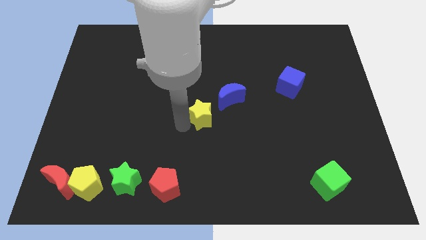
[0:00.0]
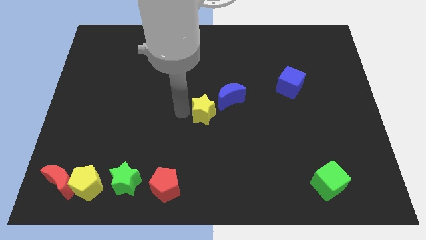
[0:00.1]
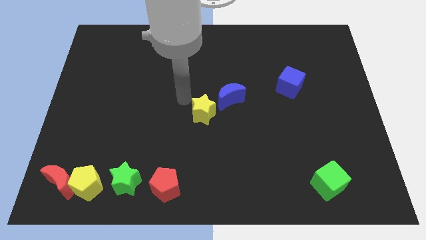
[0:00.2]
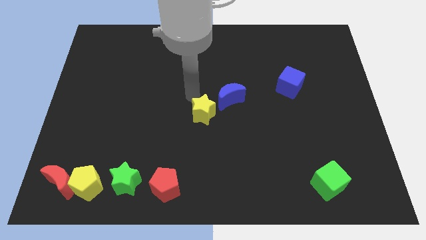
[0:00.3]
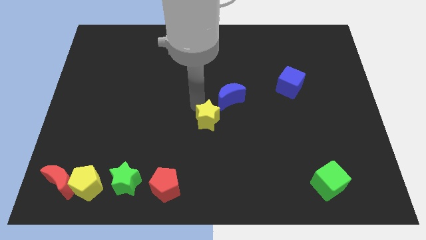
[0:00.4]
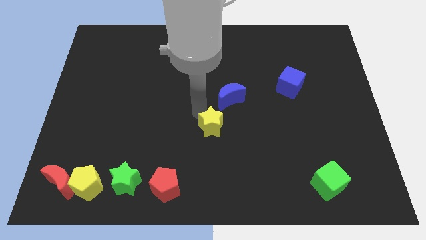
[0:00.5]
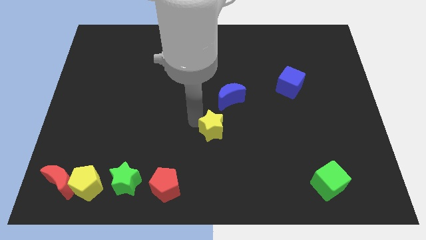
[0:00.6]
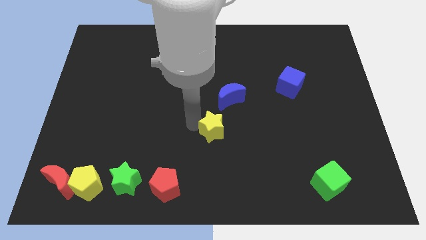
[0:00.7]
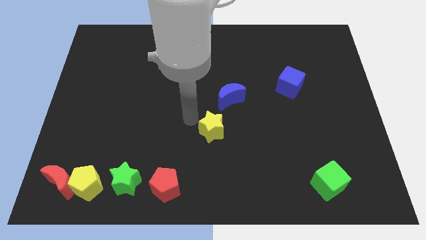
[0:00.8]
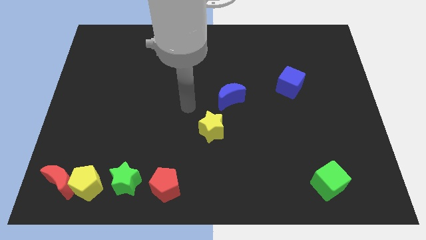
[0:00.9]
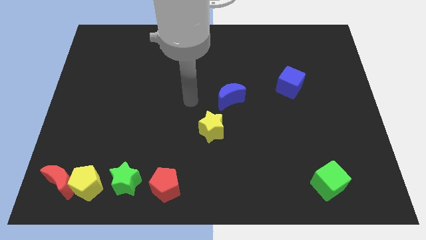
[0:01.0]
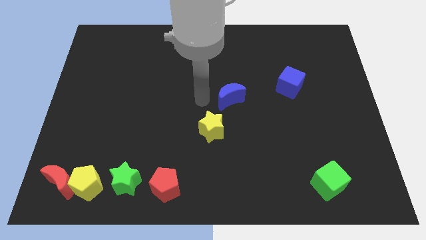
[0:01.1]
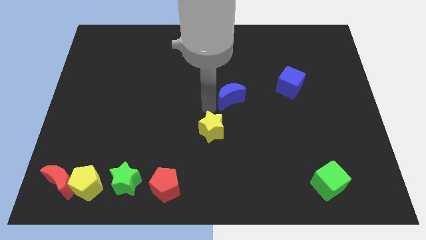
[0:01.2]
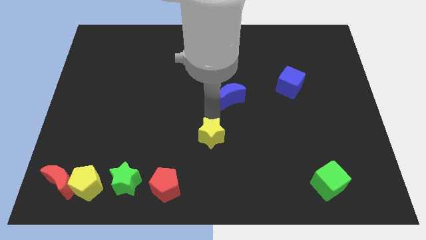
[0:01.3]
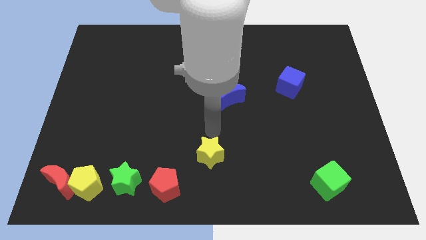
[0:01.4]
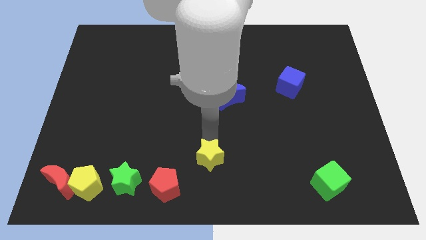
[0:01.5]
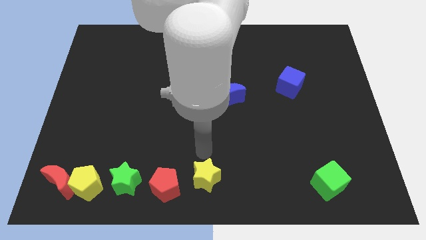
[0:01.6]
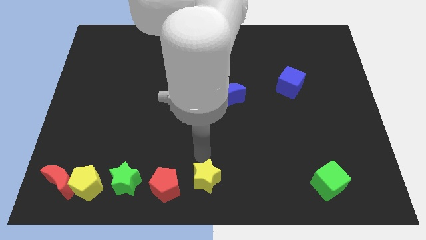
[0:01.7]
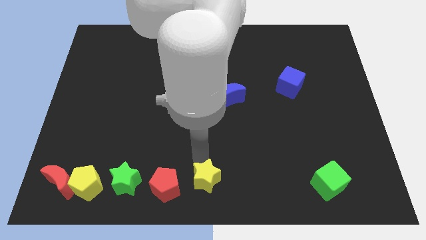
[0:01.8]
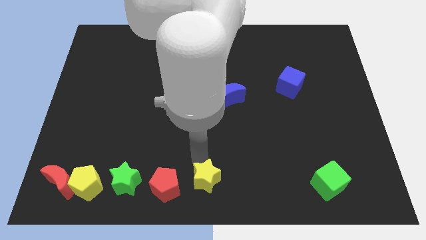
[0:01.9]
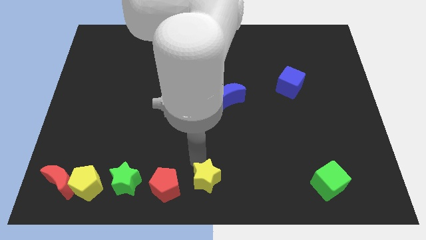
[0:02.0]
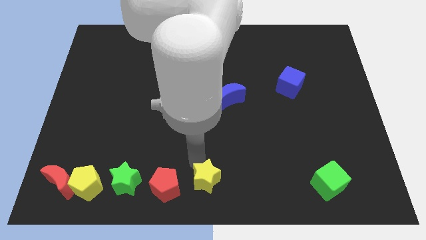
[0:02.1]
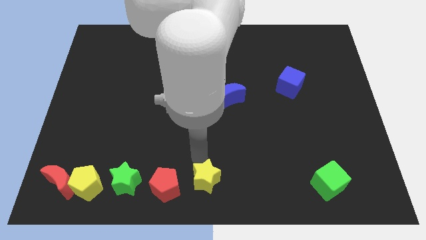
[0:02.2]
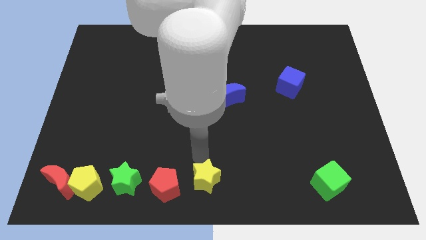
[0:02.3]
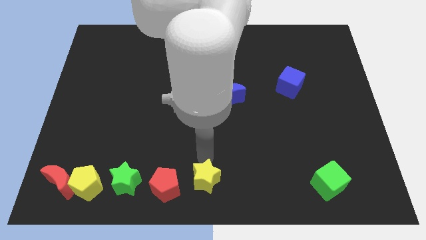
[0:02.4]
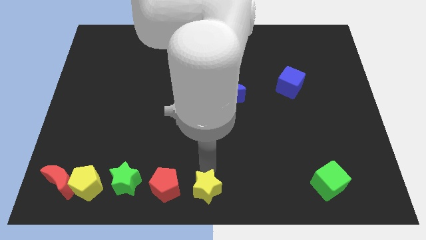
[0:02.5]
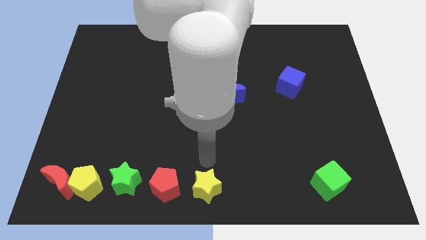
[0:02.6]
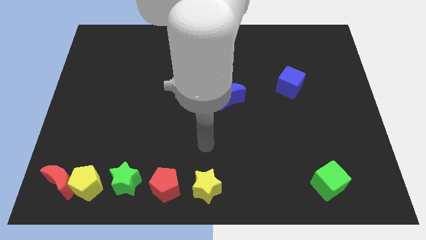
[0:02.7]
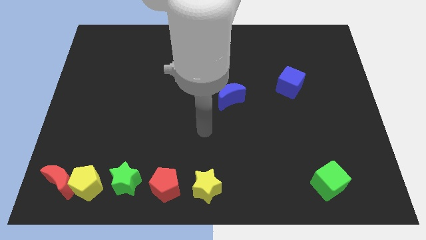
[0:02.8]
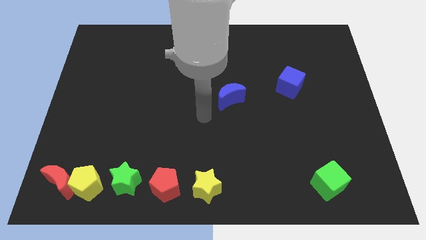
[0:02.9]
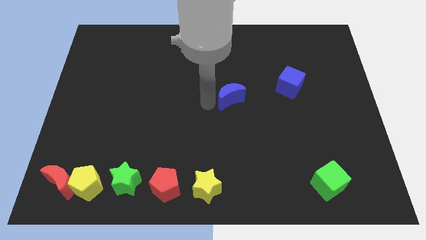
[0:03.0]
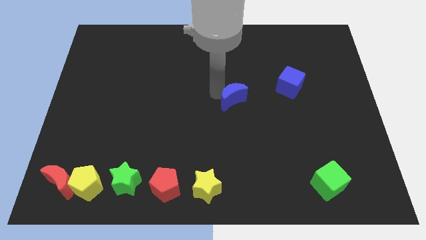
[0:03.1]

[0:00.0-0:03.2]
place yellow star to the right of the red pentagon

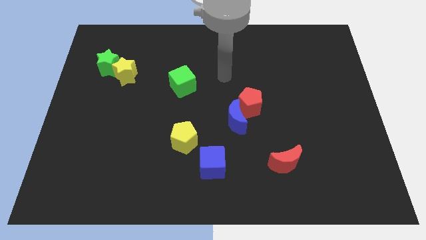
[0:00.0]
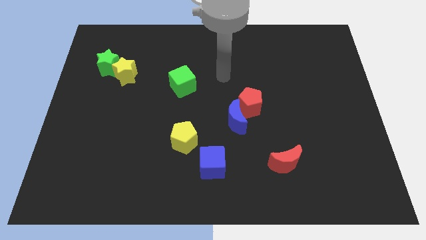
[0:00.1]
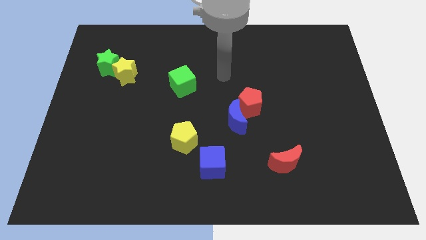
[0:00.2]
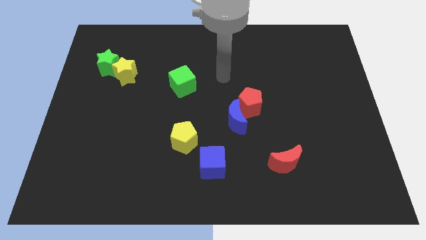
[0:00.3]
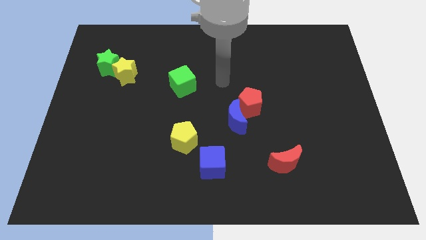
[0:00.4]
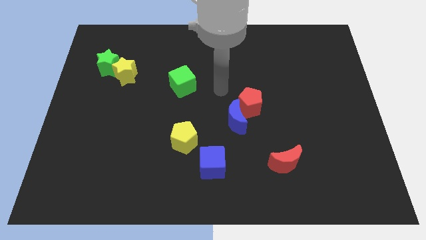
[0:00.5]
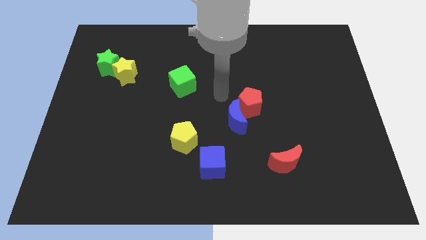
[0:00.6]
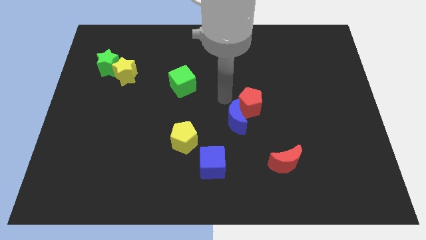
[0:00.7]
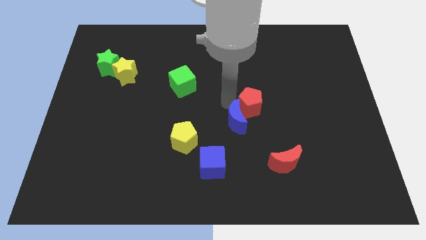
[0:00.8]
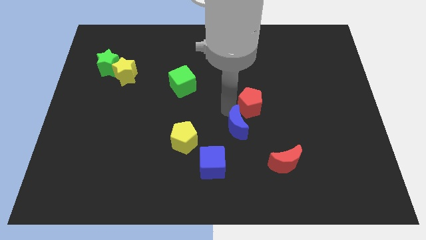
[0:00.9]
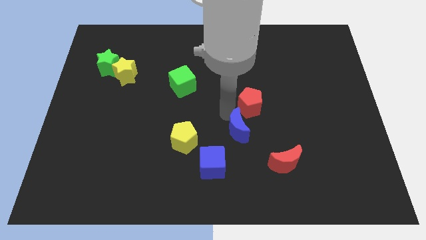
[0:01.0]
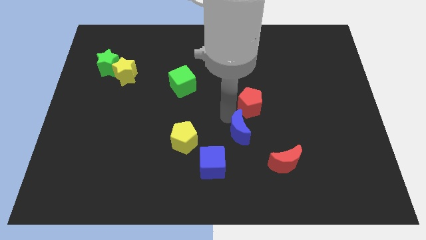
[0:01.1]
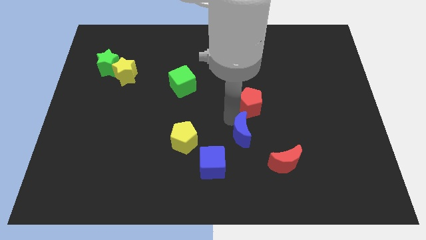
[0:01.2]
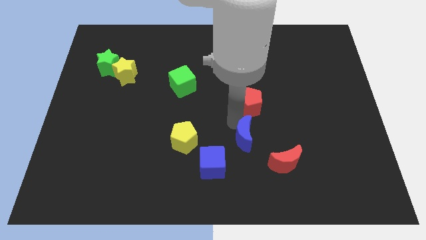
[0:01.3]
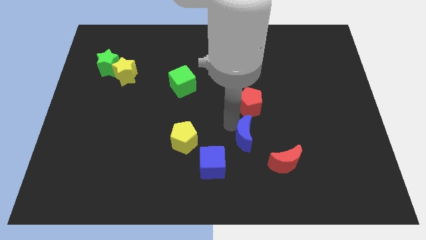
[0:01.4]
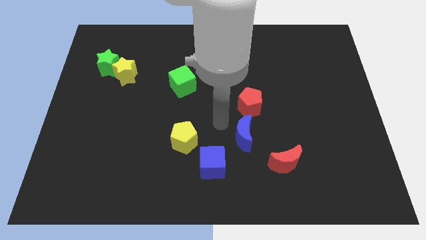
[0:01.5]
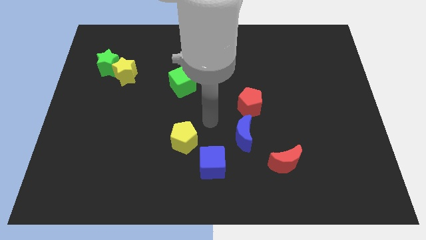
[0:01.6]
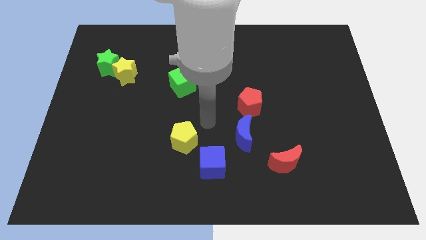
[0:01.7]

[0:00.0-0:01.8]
move the blue crescent to the bottom side of the red pentagon

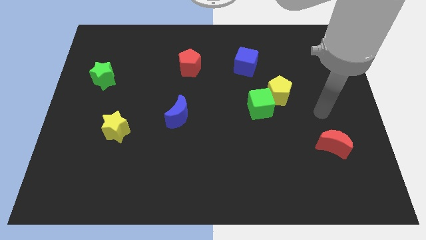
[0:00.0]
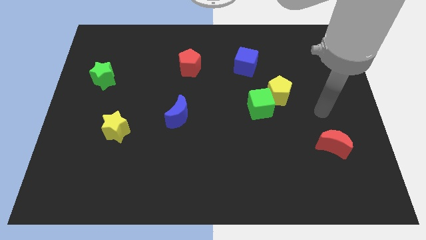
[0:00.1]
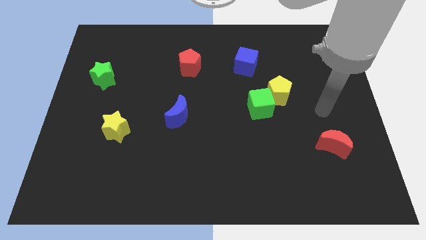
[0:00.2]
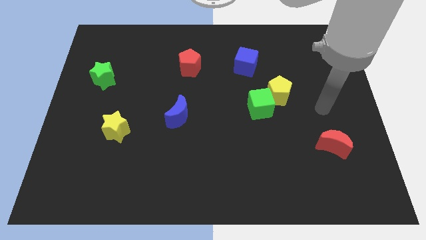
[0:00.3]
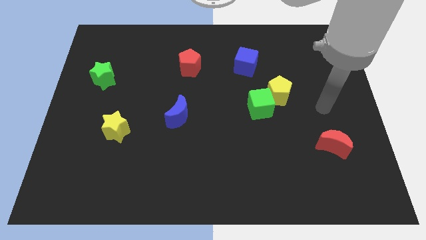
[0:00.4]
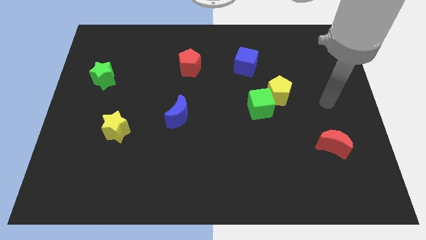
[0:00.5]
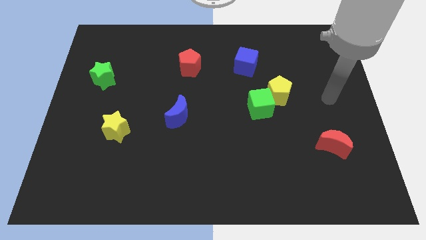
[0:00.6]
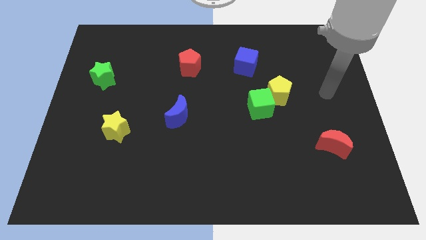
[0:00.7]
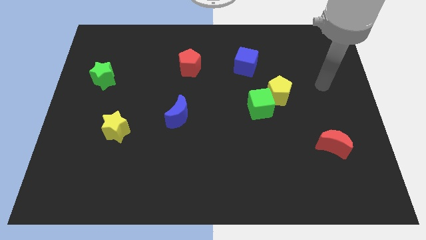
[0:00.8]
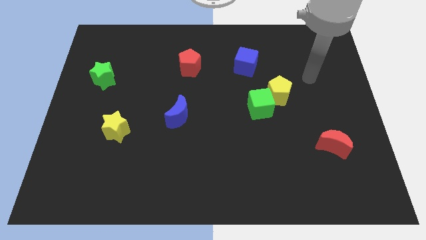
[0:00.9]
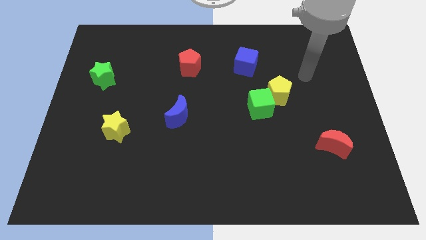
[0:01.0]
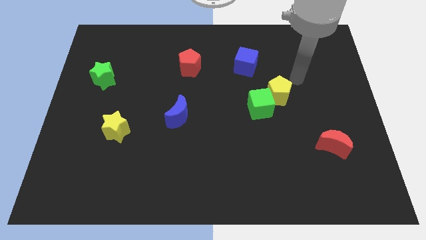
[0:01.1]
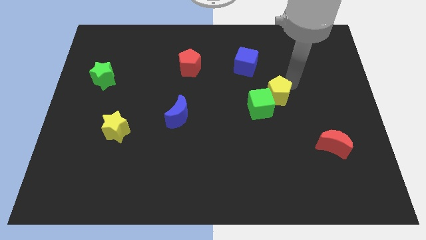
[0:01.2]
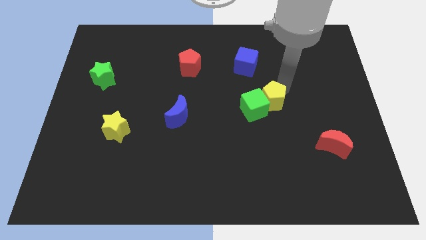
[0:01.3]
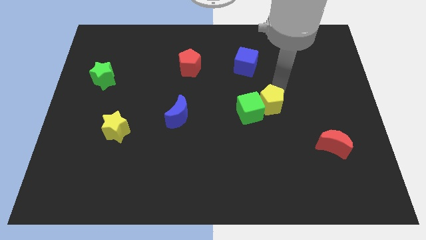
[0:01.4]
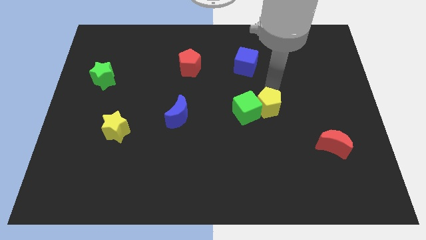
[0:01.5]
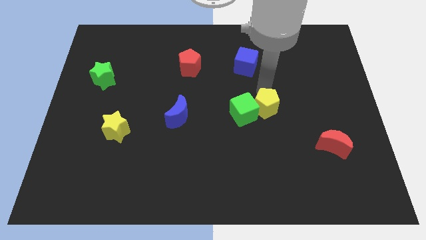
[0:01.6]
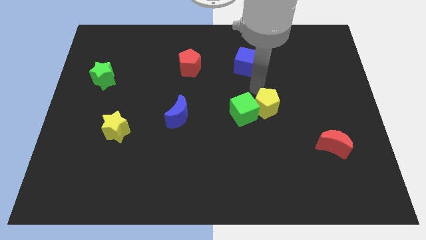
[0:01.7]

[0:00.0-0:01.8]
slide the yellow pentagon and the green cube slightly to the left

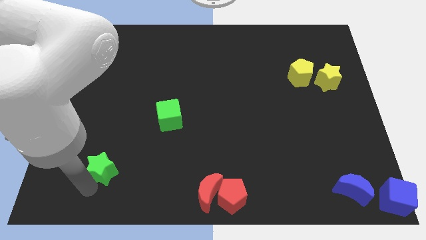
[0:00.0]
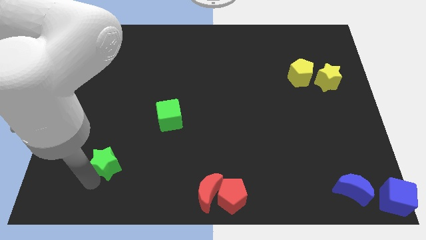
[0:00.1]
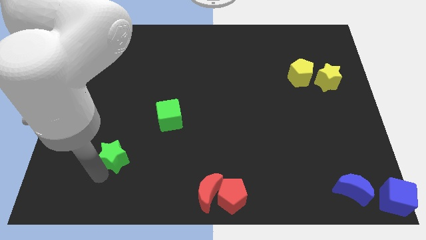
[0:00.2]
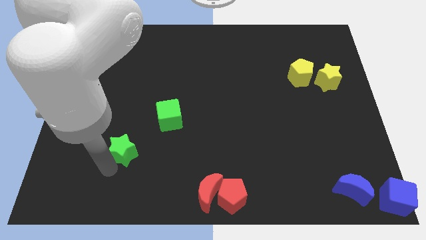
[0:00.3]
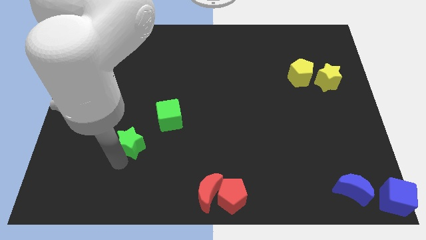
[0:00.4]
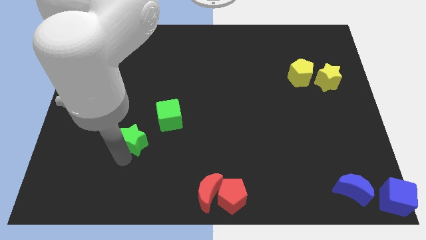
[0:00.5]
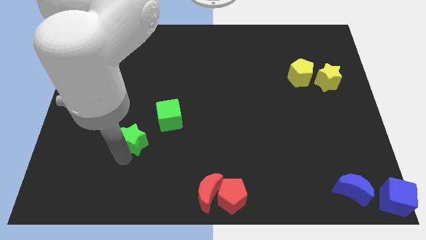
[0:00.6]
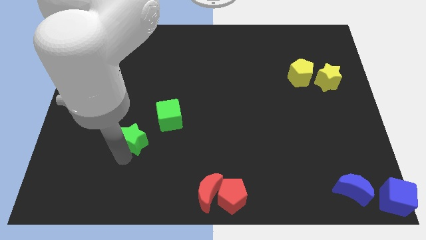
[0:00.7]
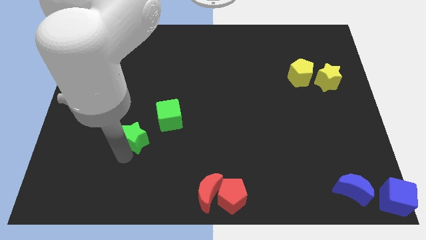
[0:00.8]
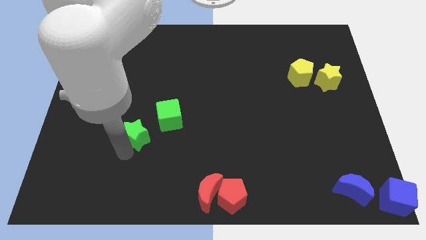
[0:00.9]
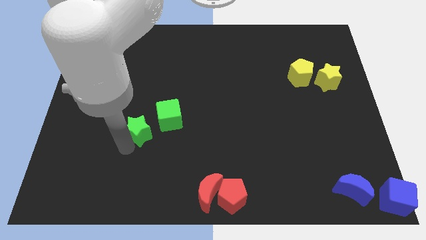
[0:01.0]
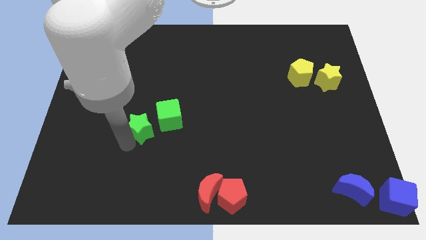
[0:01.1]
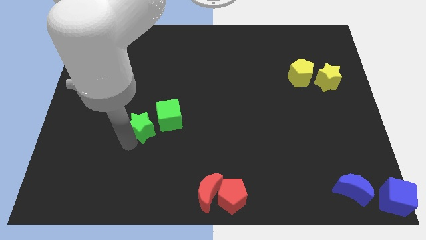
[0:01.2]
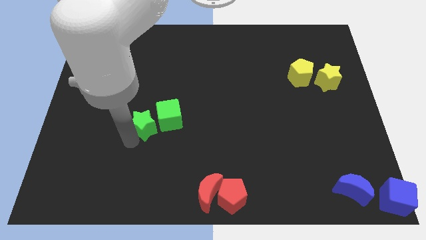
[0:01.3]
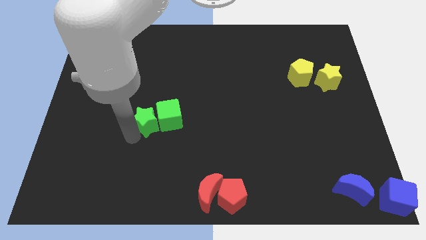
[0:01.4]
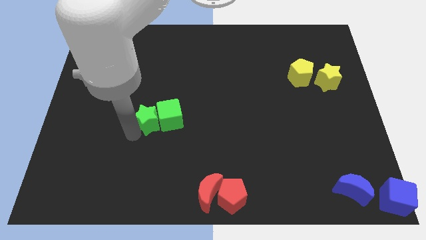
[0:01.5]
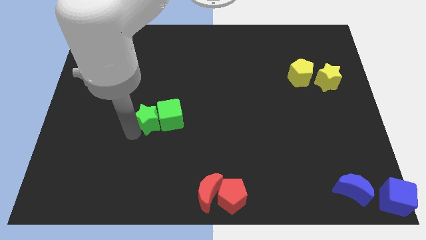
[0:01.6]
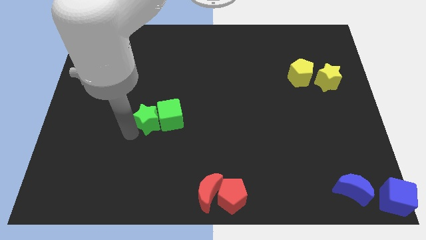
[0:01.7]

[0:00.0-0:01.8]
drag the green star into the green cube

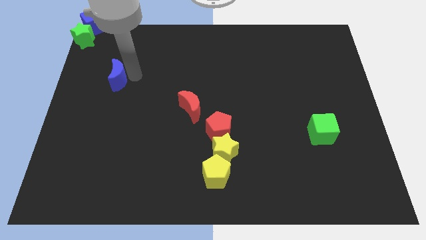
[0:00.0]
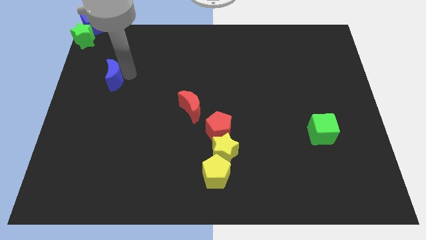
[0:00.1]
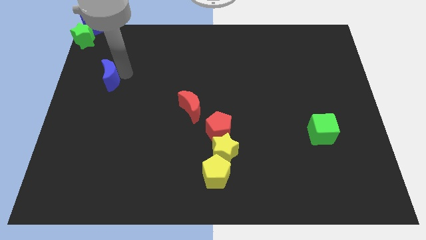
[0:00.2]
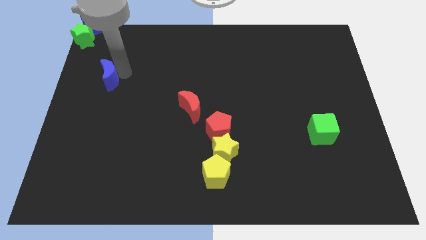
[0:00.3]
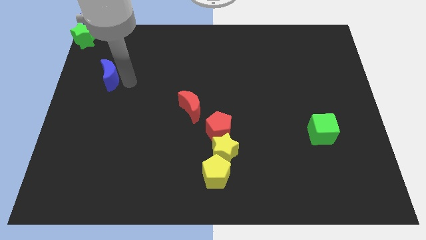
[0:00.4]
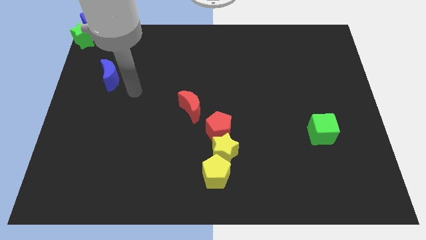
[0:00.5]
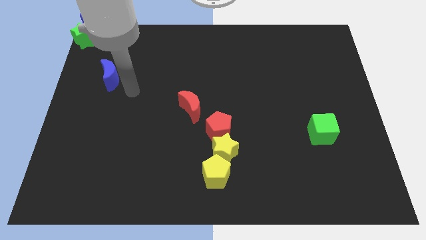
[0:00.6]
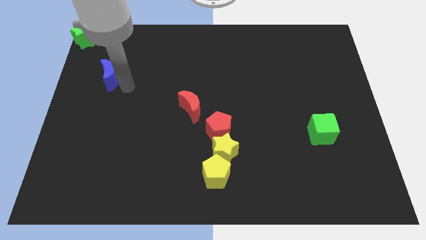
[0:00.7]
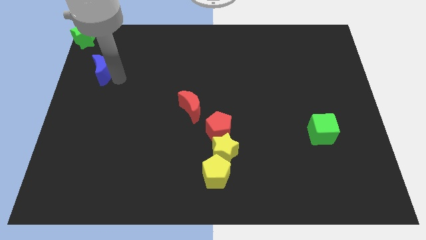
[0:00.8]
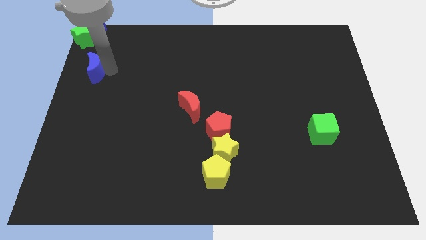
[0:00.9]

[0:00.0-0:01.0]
move your arm towards the bottom of the blue crescent
